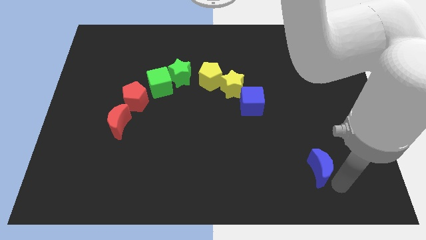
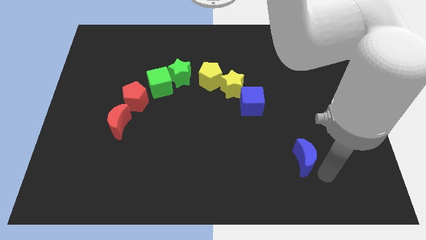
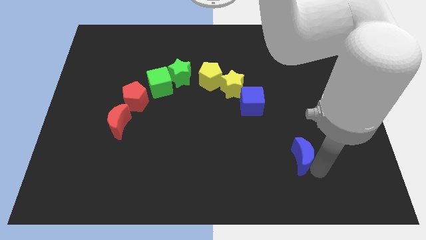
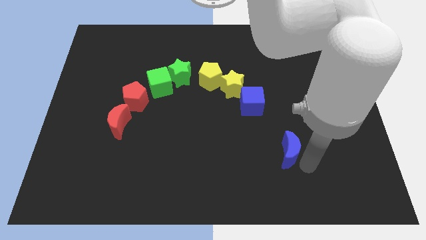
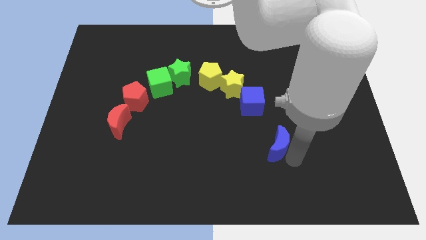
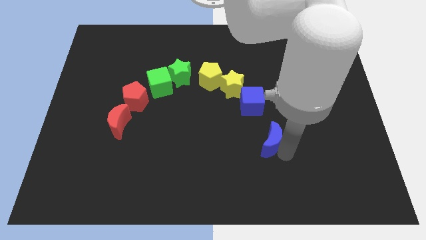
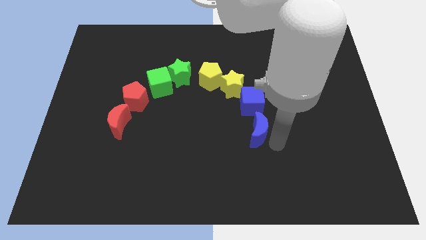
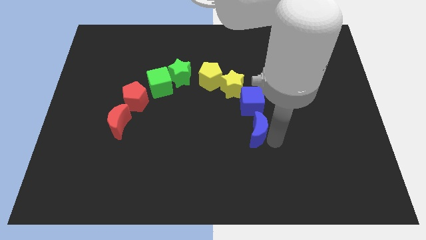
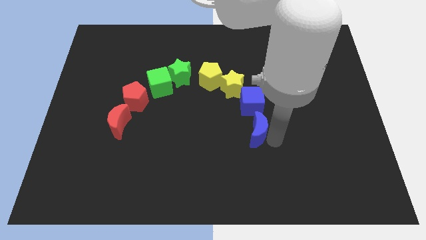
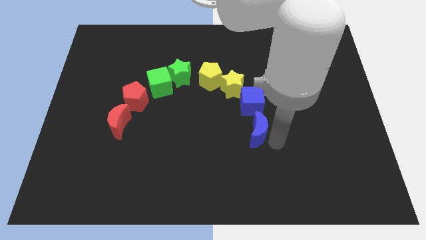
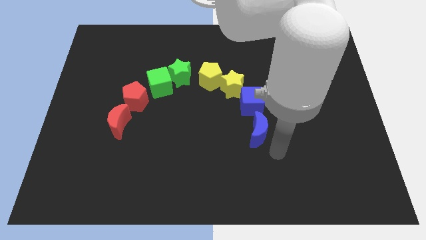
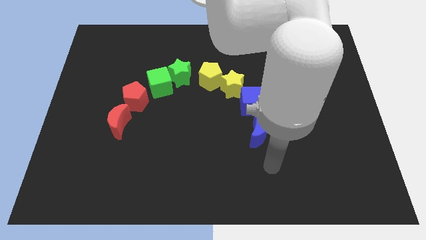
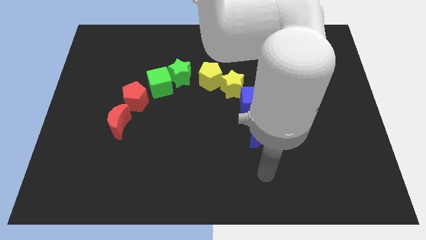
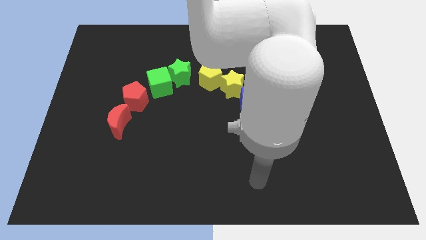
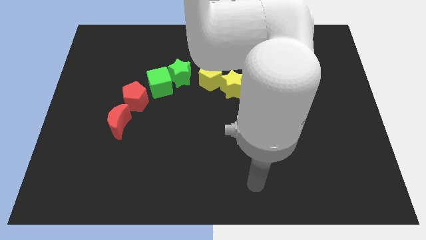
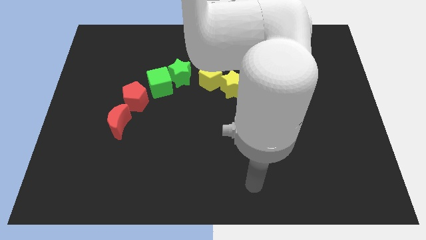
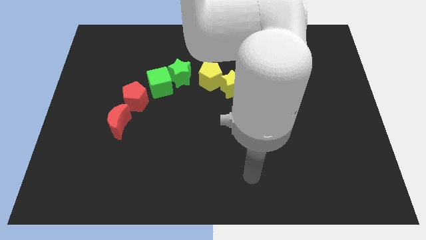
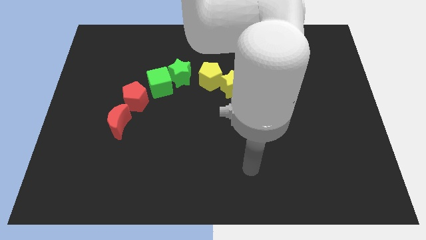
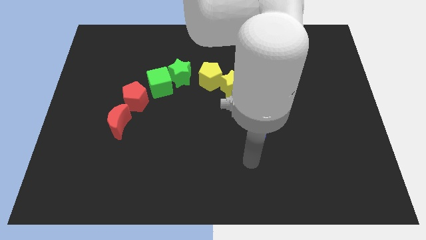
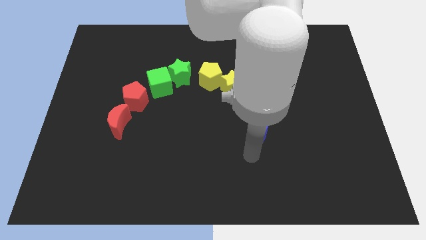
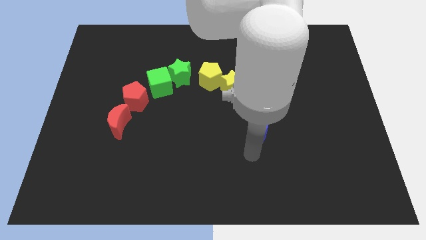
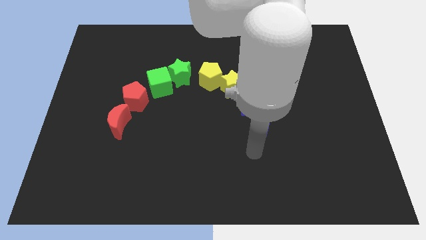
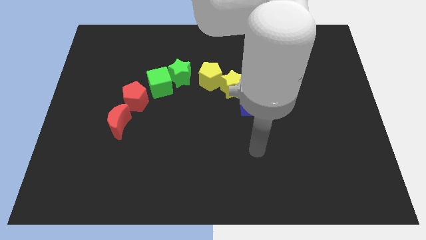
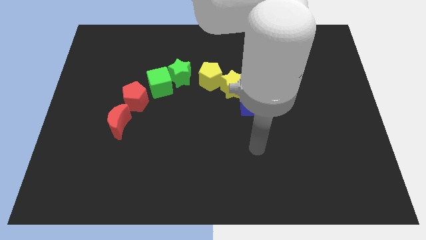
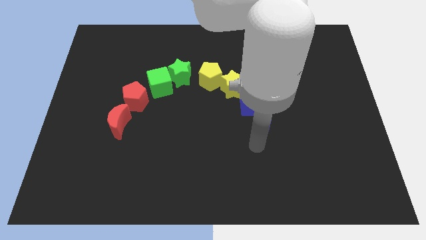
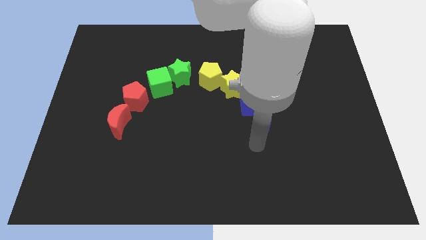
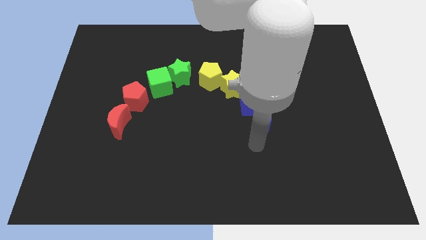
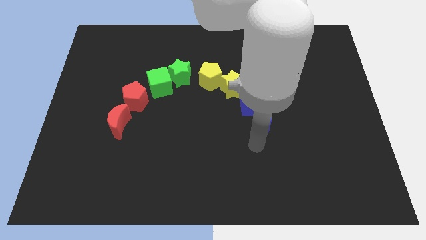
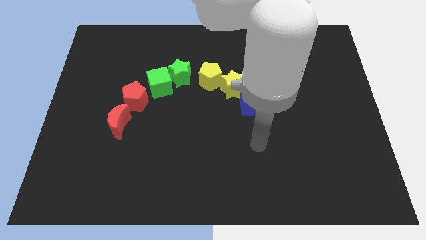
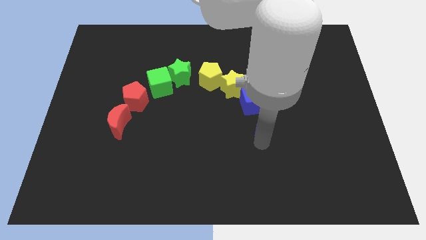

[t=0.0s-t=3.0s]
move the blue crescent to the bottom of the blue cube

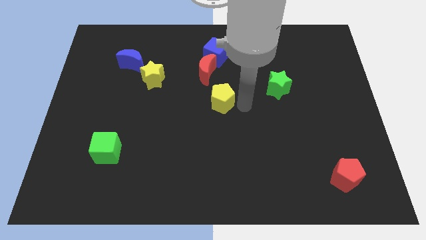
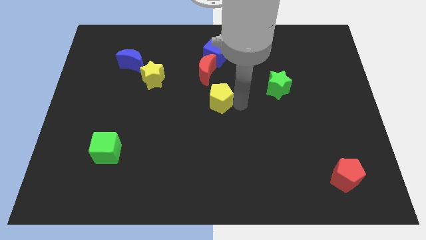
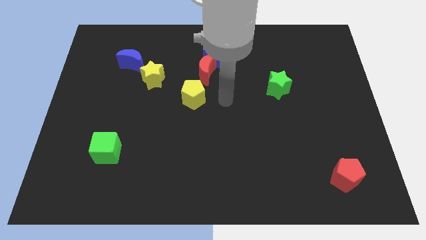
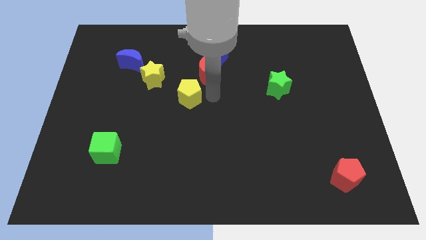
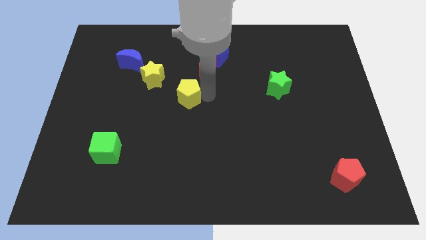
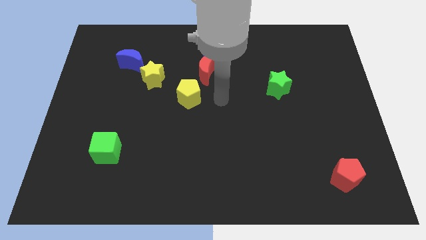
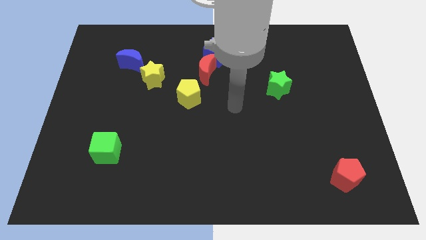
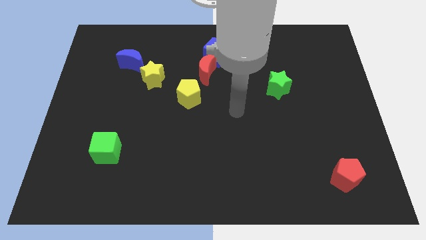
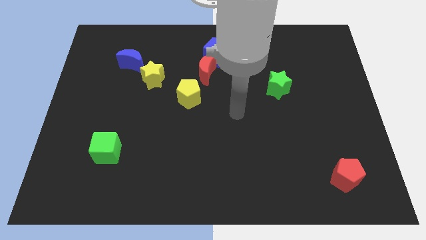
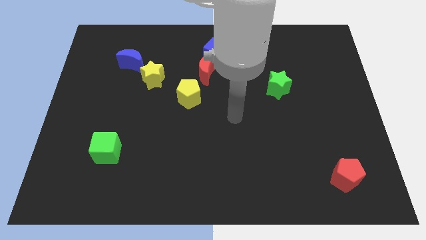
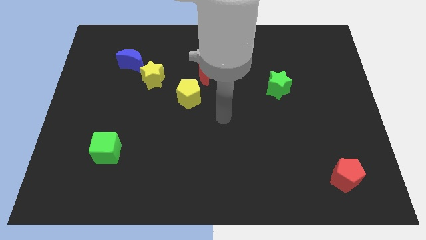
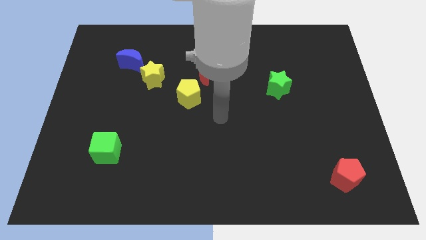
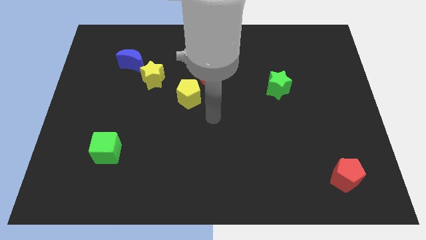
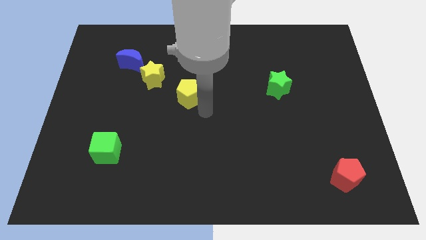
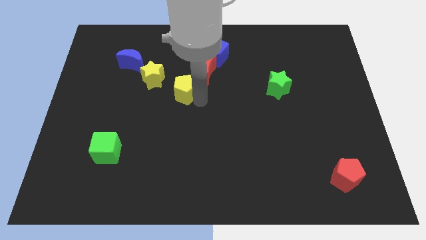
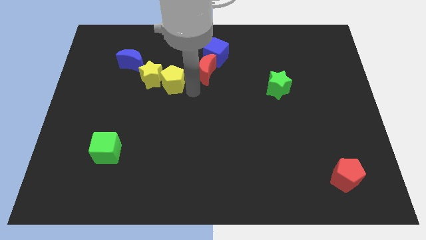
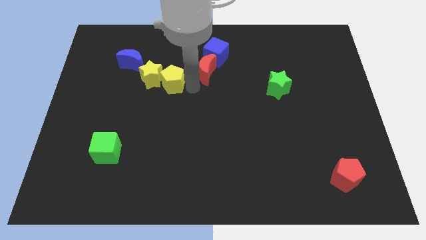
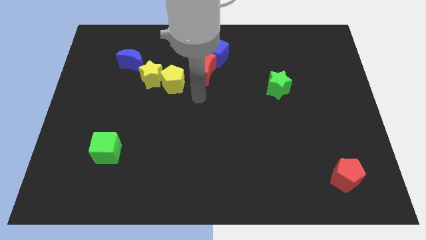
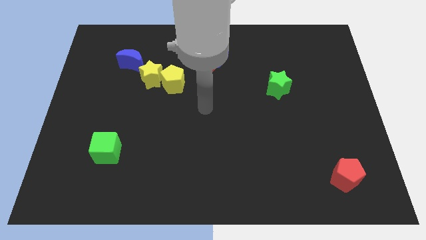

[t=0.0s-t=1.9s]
place the yellow pentagon towards the bottom right of the yellow star

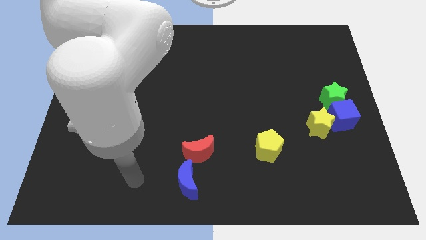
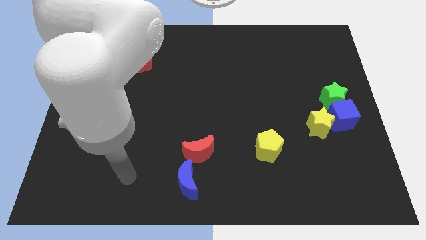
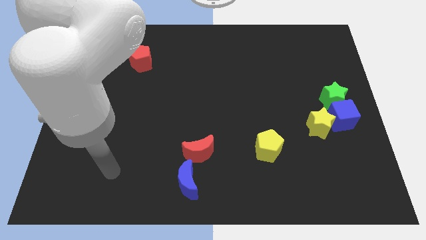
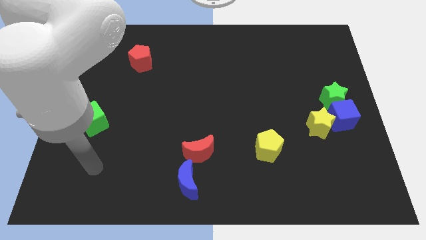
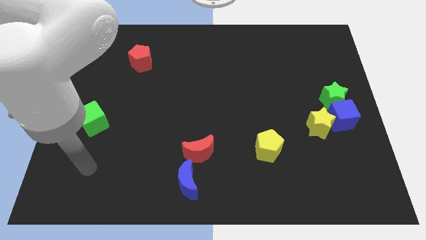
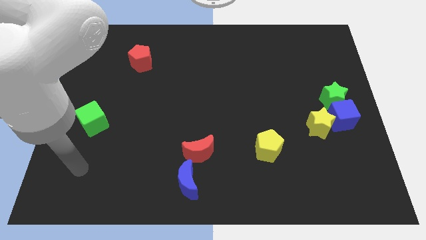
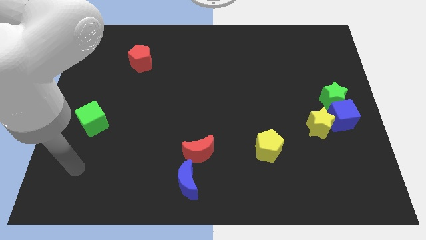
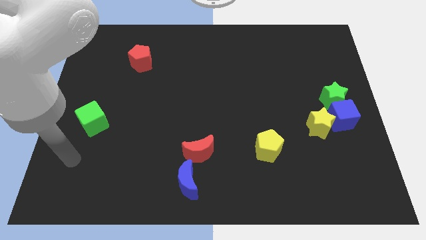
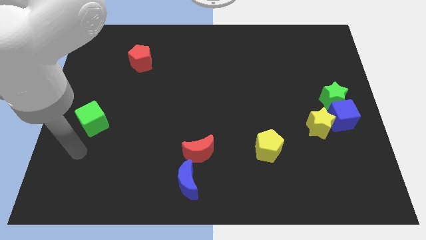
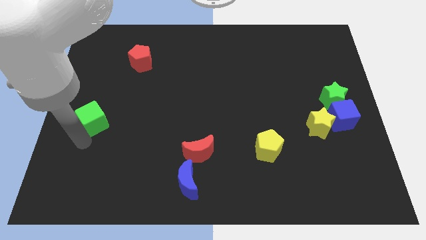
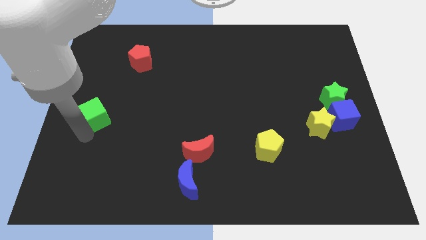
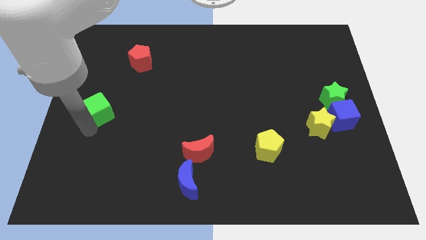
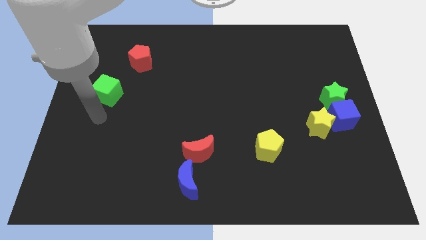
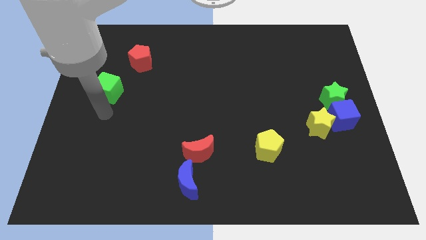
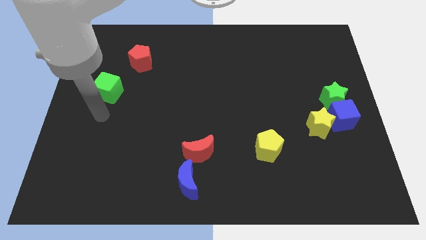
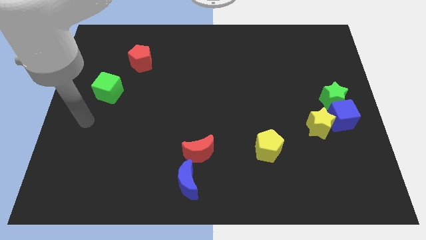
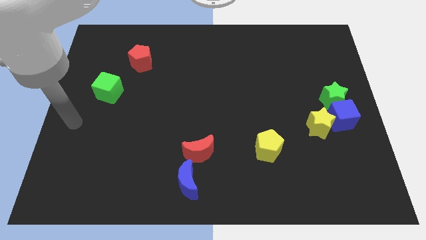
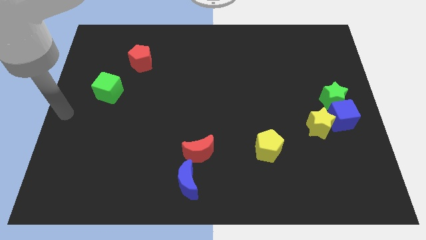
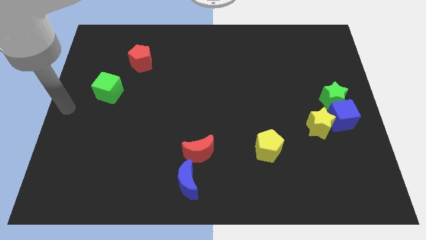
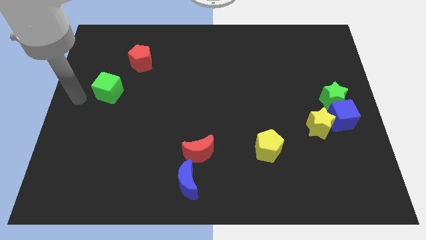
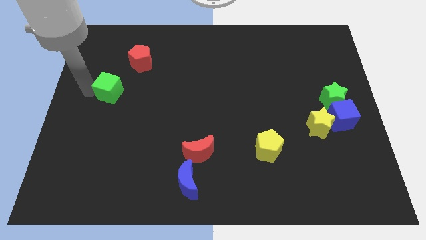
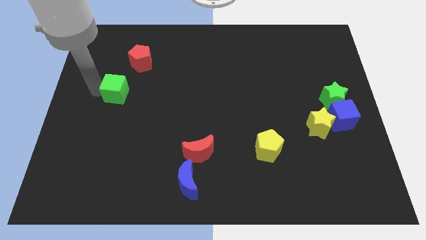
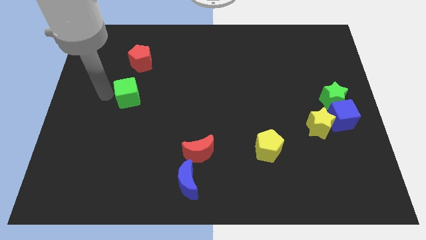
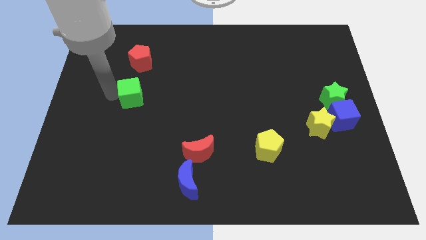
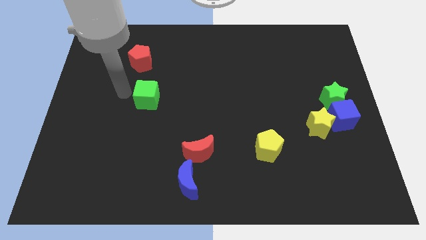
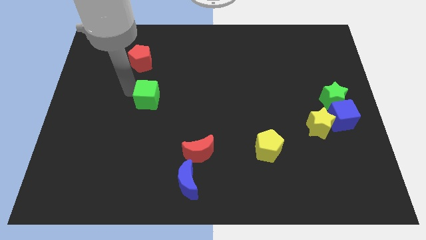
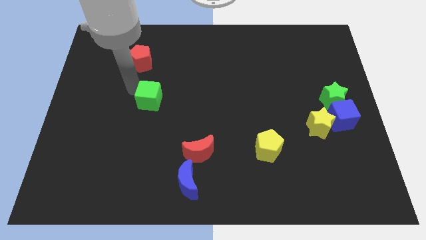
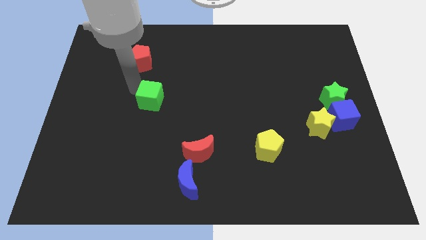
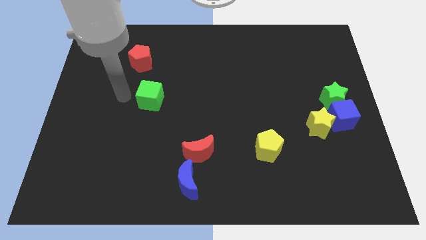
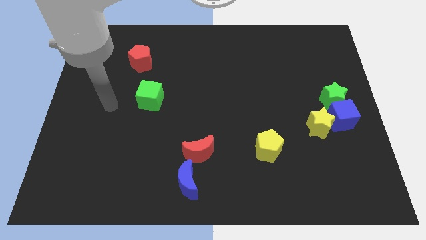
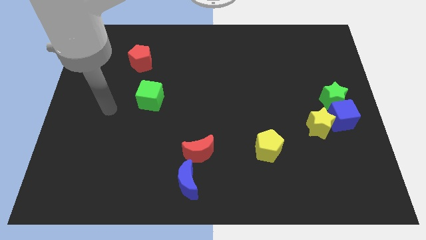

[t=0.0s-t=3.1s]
move green cube to the bottom of red pentagon

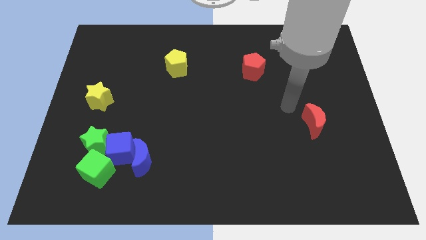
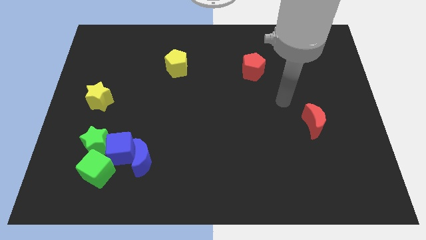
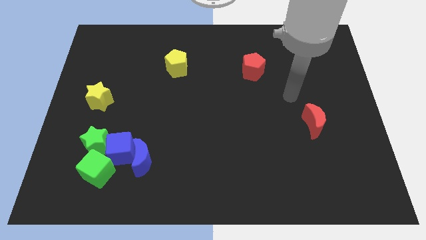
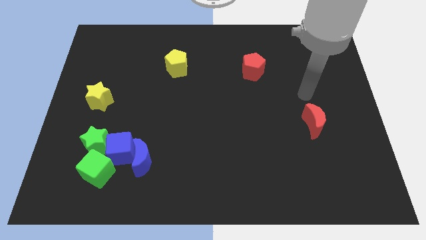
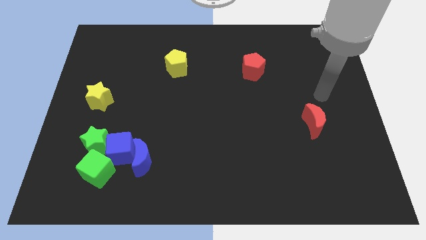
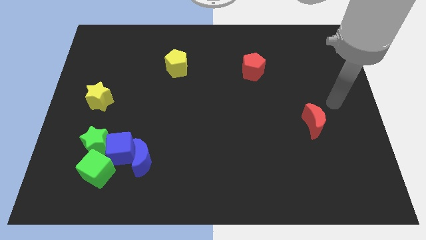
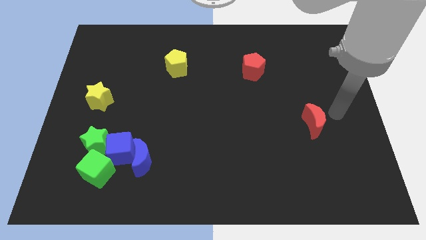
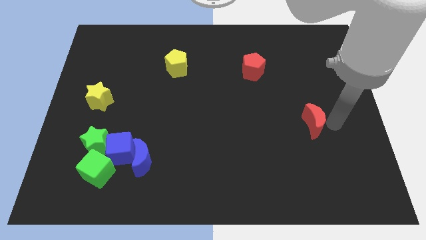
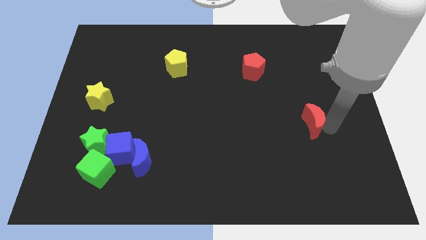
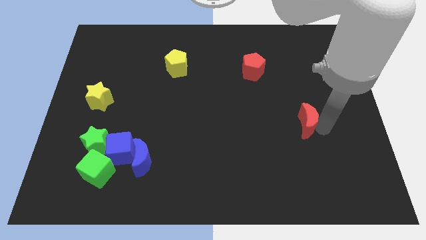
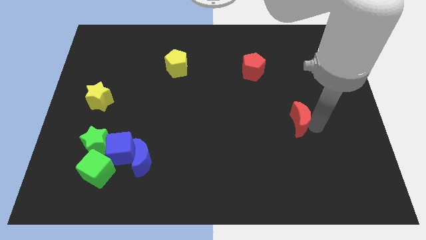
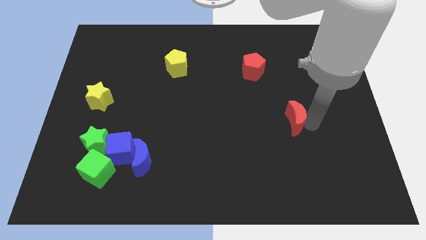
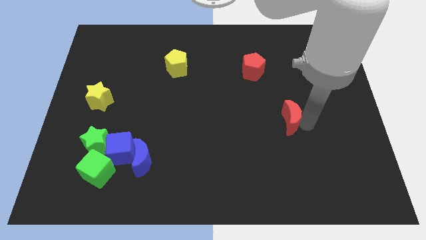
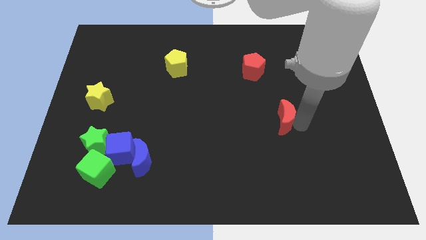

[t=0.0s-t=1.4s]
drag the red moon towards the center
